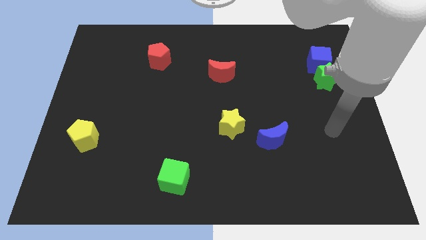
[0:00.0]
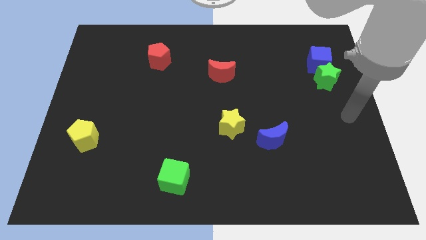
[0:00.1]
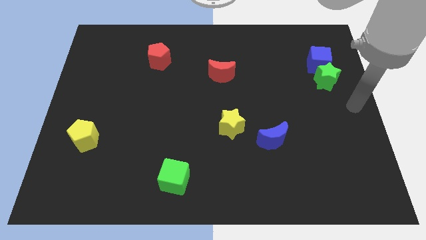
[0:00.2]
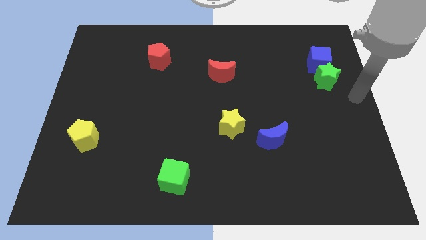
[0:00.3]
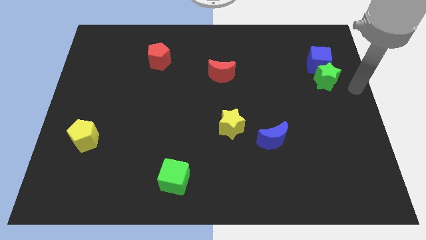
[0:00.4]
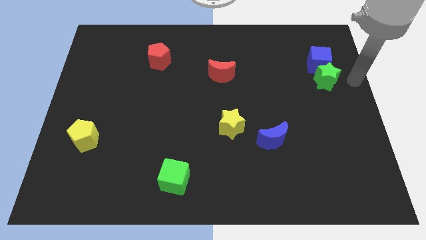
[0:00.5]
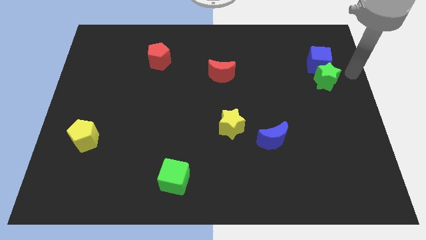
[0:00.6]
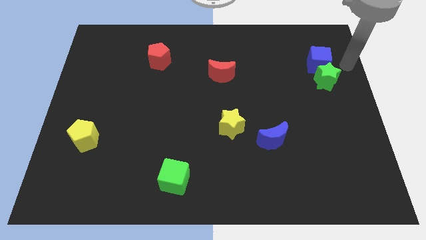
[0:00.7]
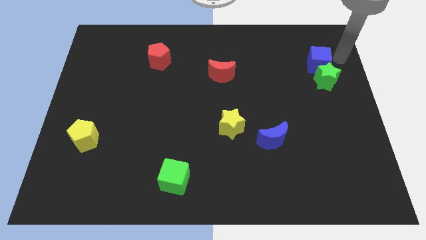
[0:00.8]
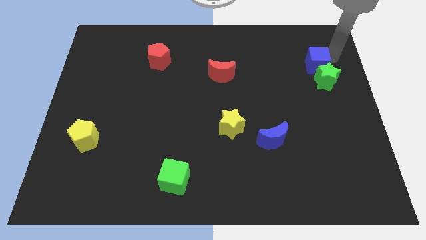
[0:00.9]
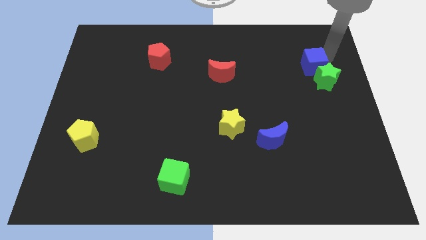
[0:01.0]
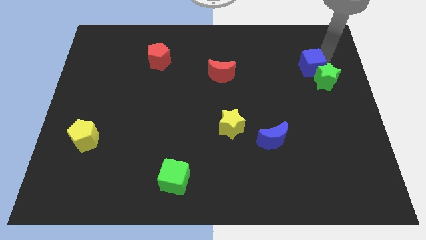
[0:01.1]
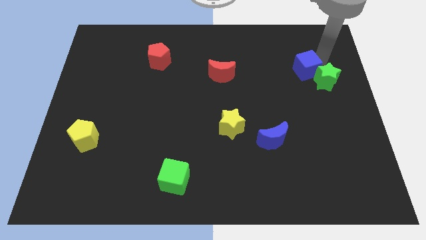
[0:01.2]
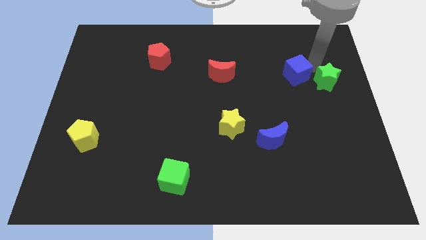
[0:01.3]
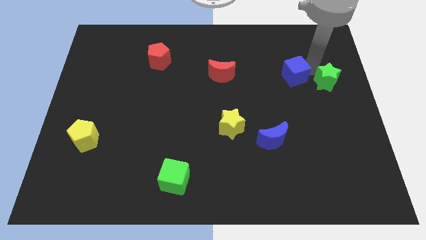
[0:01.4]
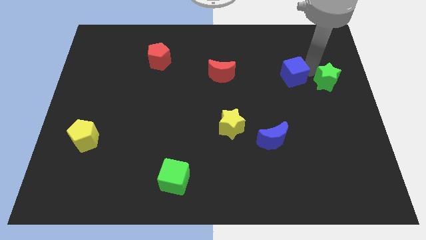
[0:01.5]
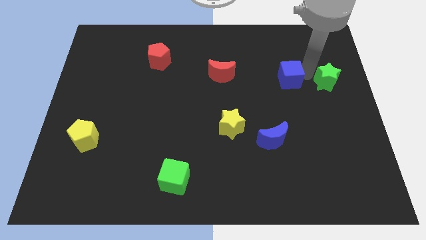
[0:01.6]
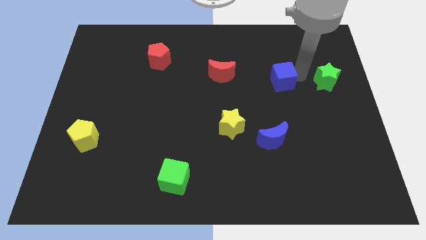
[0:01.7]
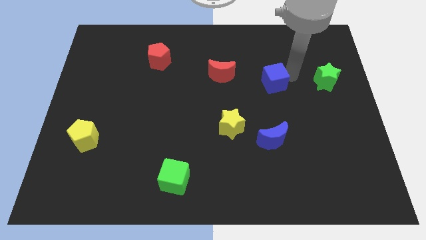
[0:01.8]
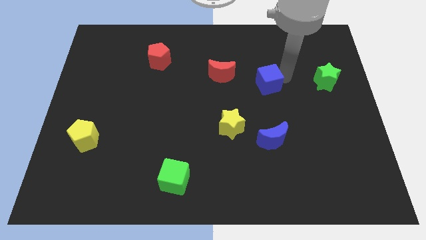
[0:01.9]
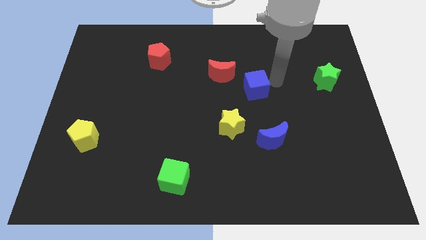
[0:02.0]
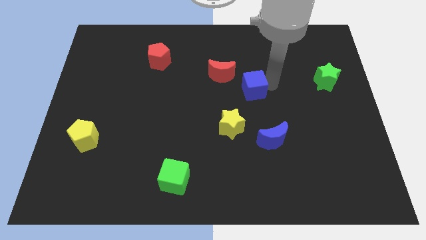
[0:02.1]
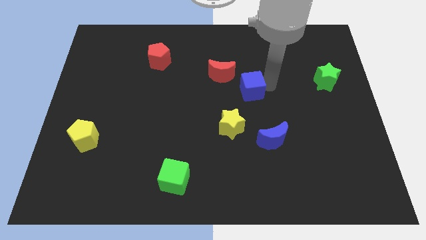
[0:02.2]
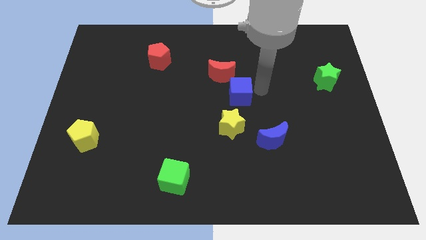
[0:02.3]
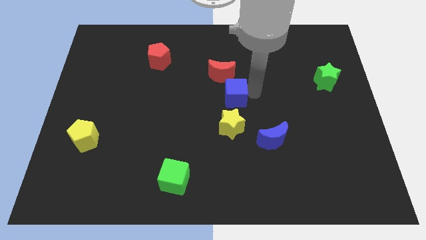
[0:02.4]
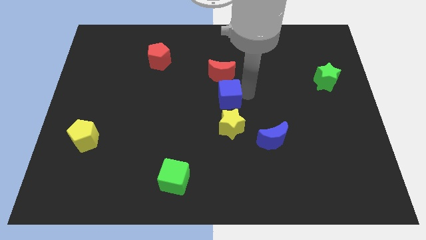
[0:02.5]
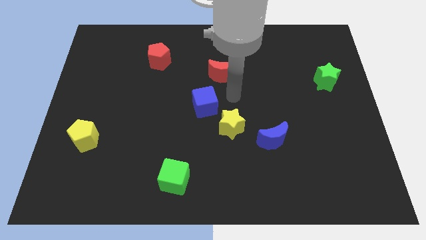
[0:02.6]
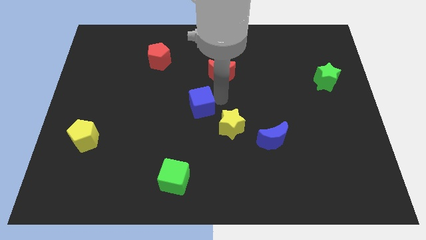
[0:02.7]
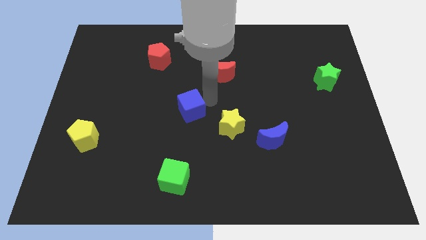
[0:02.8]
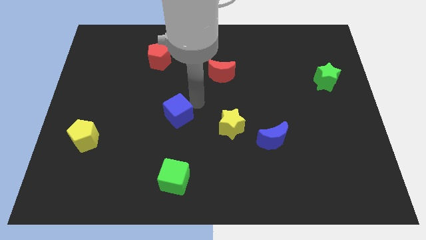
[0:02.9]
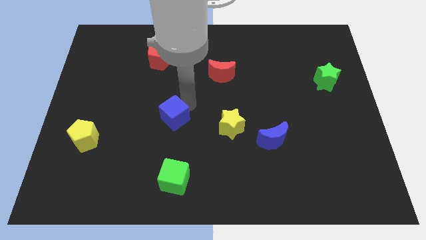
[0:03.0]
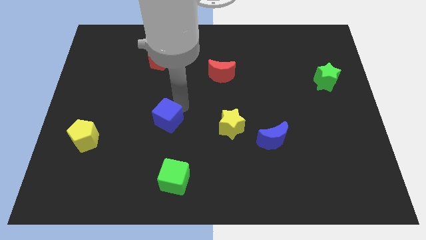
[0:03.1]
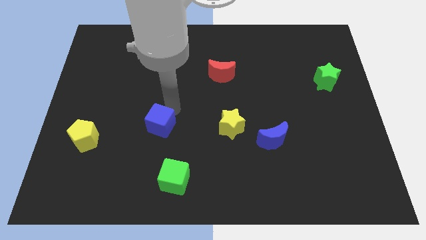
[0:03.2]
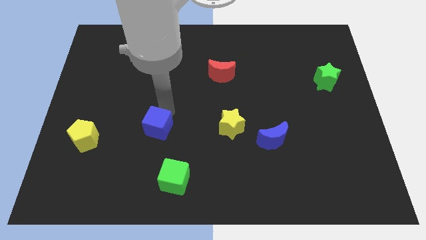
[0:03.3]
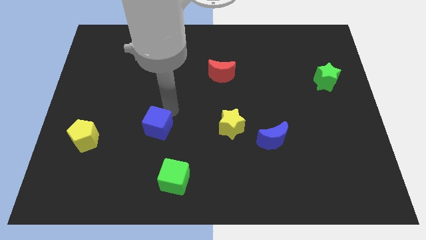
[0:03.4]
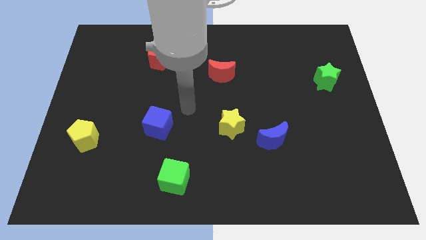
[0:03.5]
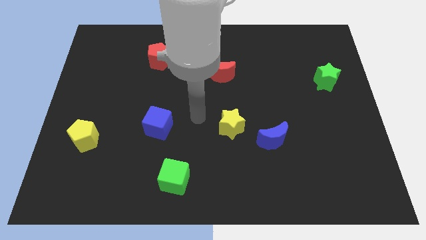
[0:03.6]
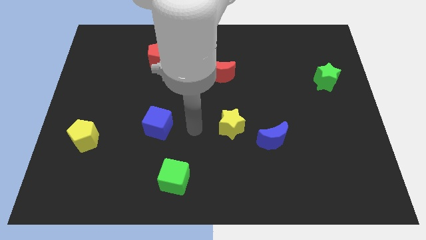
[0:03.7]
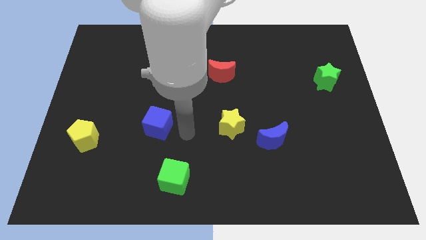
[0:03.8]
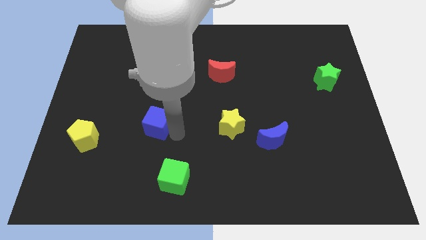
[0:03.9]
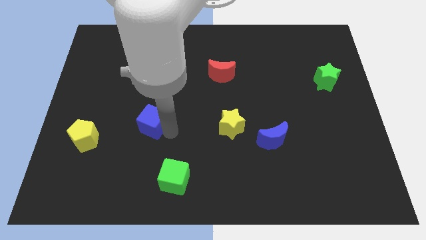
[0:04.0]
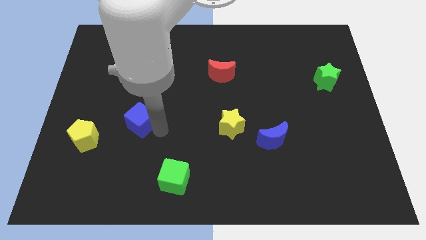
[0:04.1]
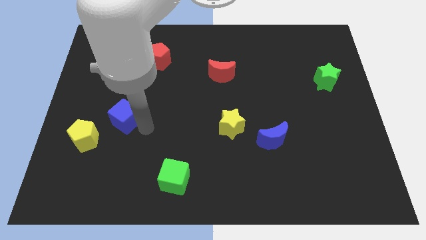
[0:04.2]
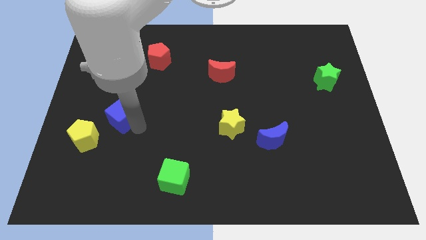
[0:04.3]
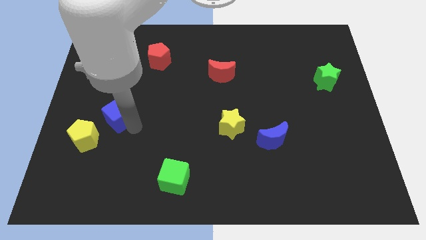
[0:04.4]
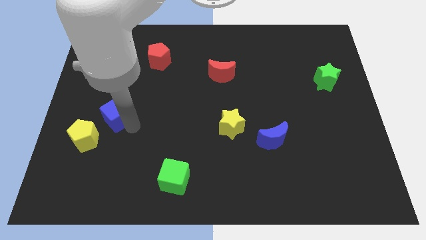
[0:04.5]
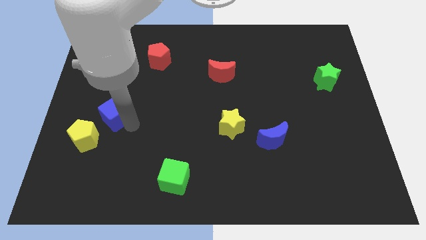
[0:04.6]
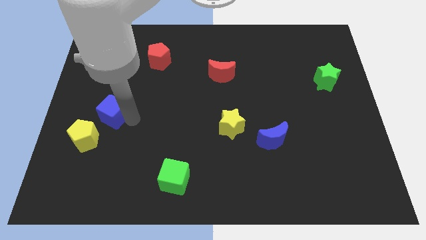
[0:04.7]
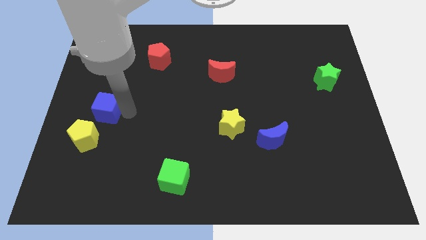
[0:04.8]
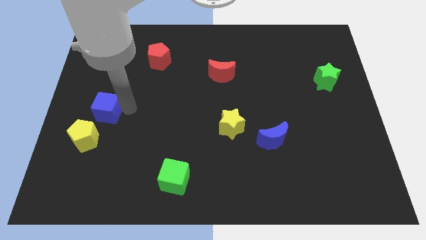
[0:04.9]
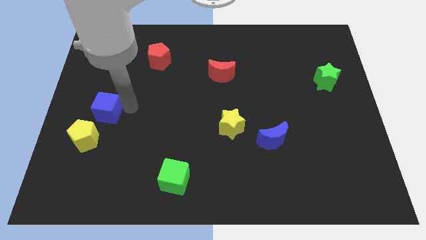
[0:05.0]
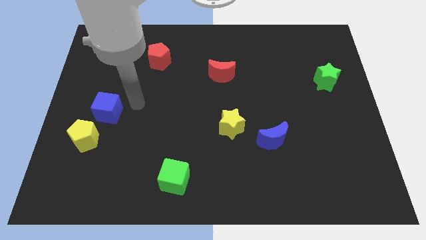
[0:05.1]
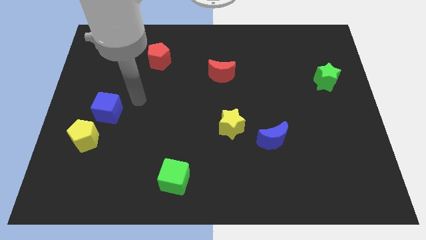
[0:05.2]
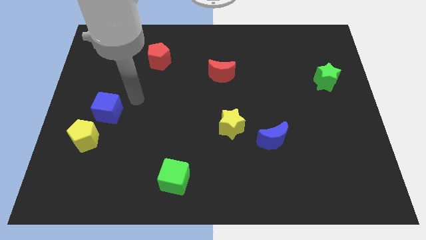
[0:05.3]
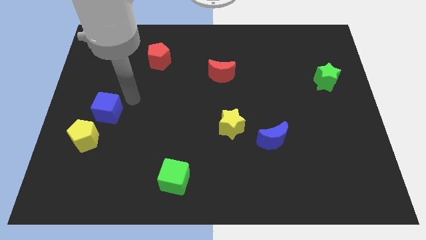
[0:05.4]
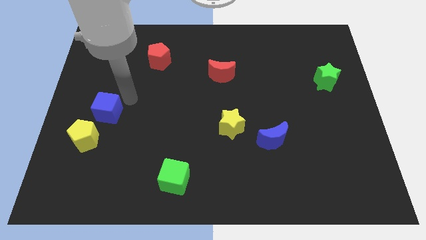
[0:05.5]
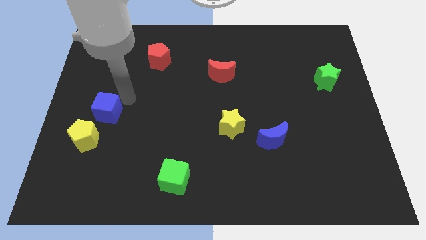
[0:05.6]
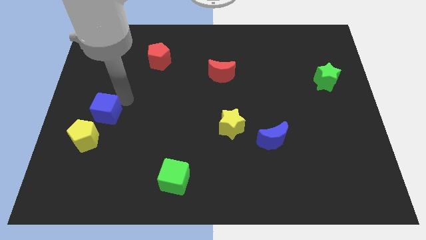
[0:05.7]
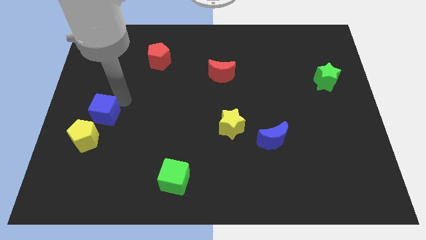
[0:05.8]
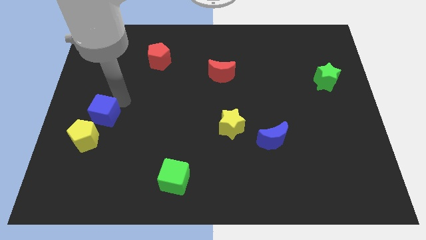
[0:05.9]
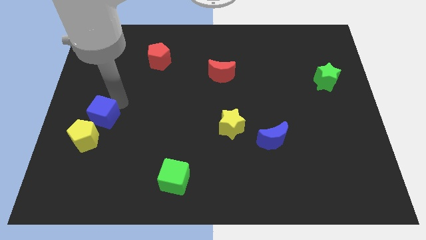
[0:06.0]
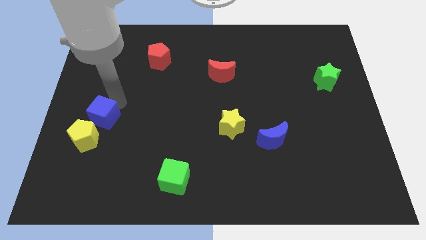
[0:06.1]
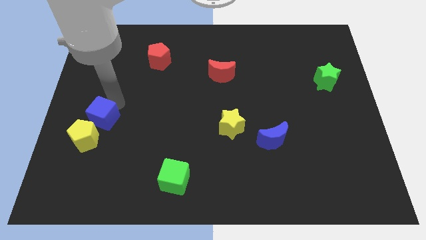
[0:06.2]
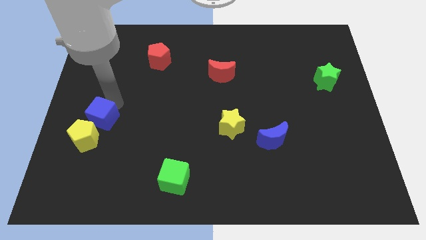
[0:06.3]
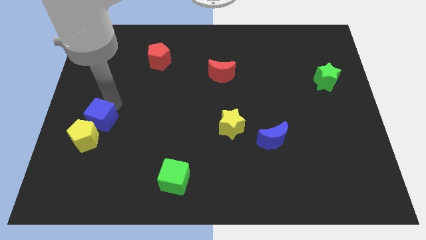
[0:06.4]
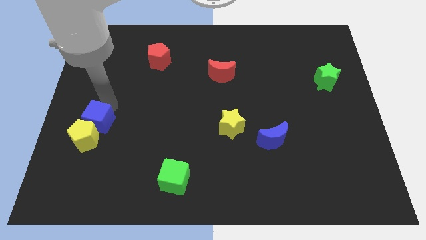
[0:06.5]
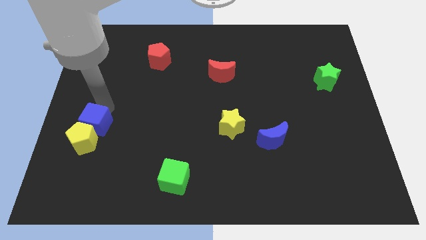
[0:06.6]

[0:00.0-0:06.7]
put the blue cube close to the yellow pentagon

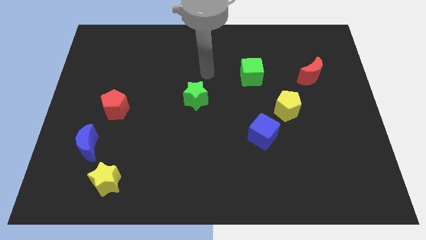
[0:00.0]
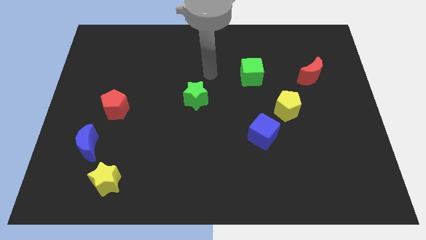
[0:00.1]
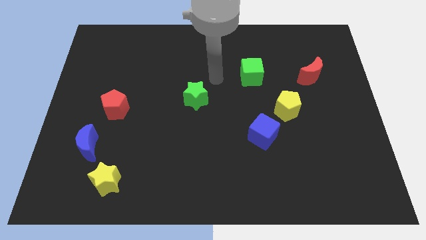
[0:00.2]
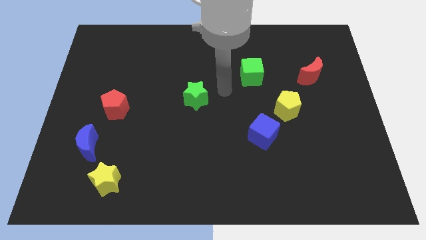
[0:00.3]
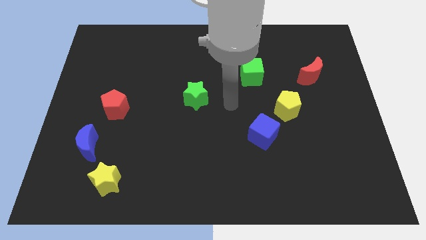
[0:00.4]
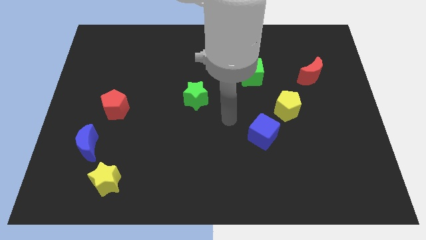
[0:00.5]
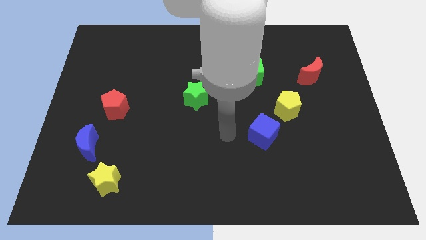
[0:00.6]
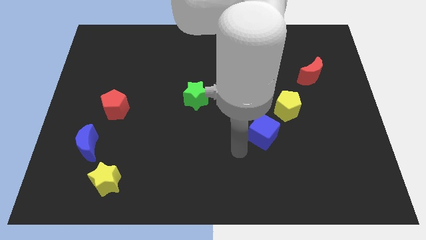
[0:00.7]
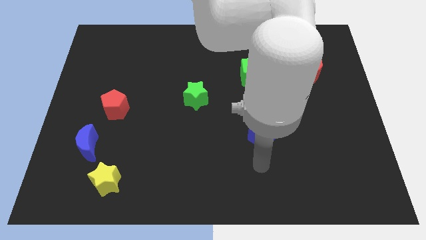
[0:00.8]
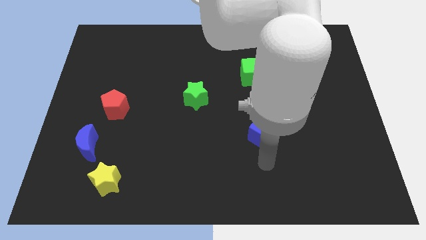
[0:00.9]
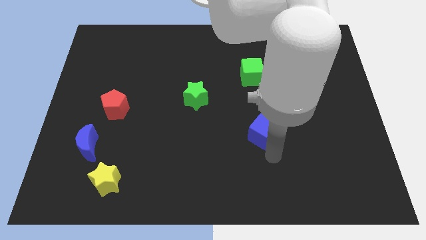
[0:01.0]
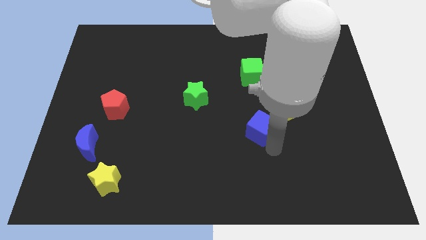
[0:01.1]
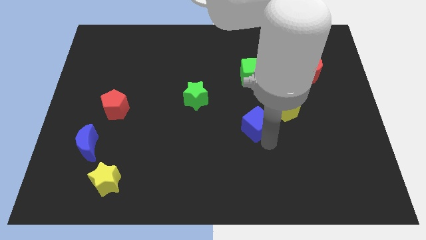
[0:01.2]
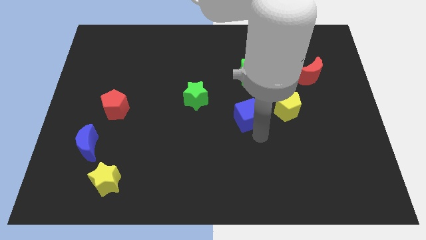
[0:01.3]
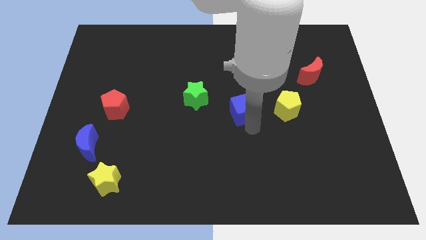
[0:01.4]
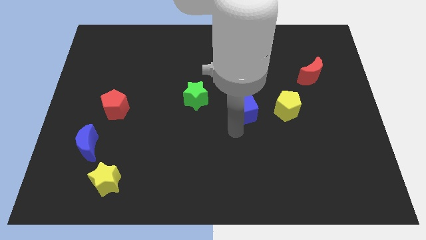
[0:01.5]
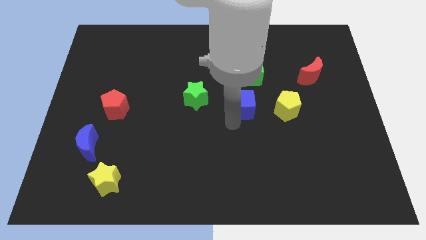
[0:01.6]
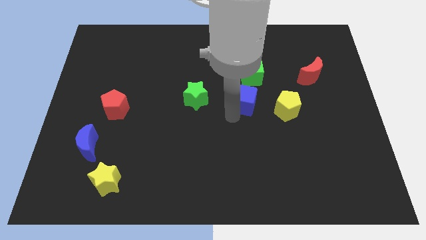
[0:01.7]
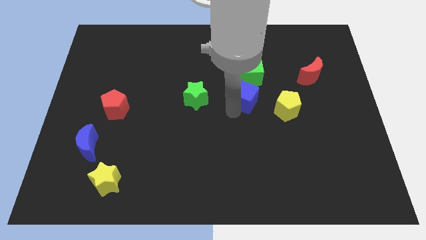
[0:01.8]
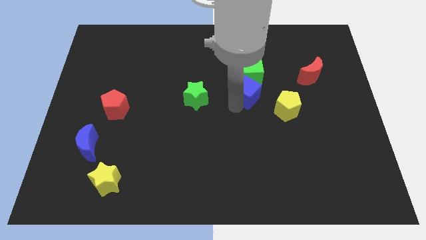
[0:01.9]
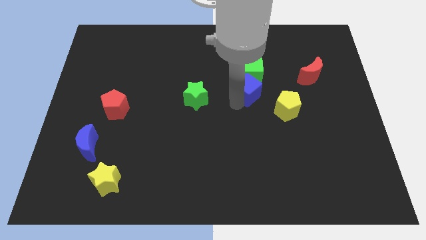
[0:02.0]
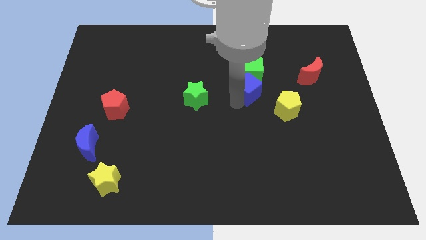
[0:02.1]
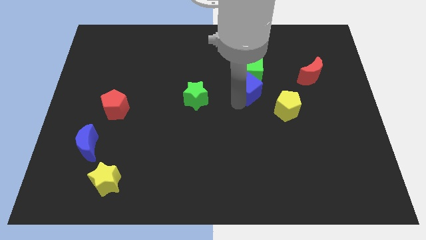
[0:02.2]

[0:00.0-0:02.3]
put the blue cube close to the green cube
